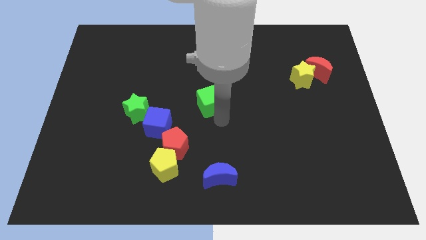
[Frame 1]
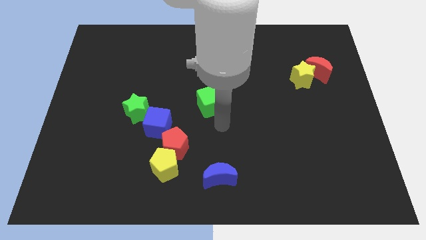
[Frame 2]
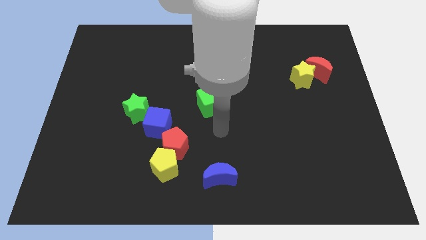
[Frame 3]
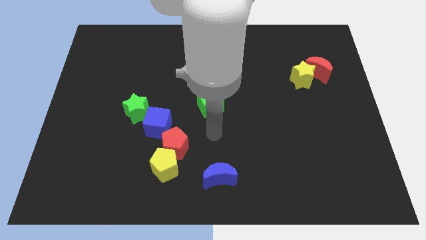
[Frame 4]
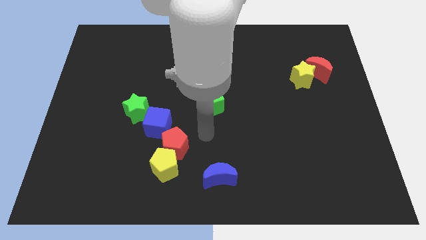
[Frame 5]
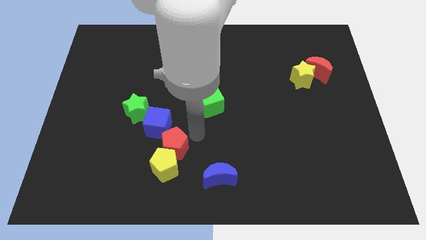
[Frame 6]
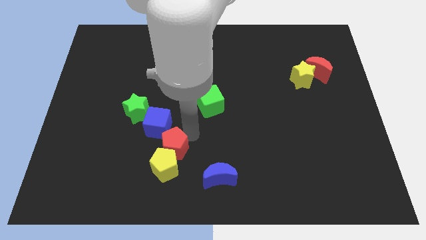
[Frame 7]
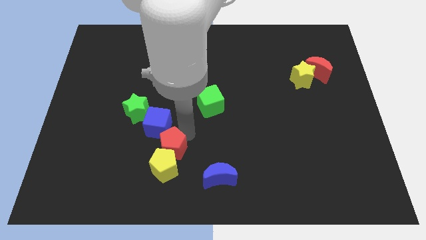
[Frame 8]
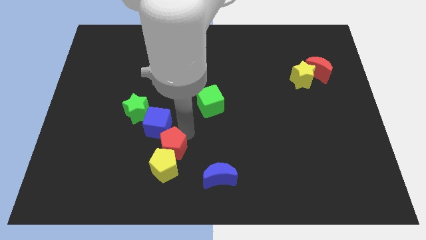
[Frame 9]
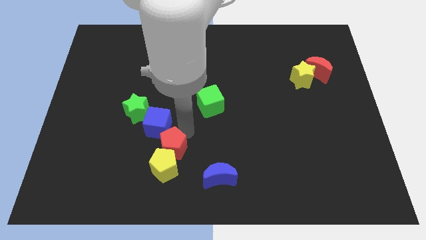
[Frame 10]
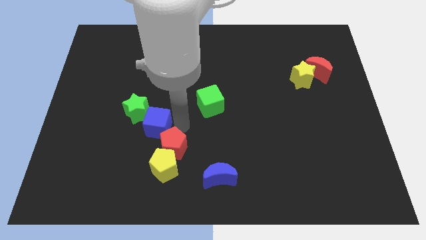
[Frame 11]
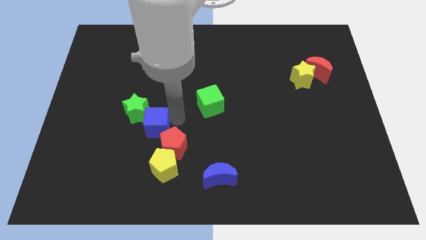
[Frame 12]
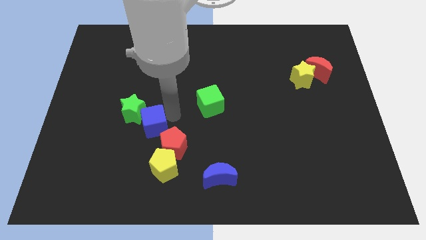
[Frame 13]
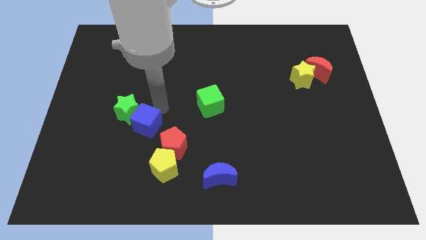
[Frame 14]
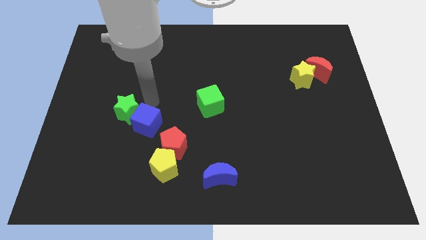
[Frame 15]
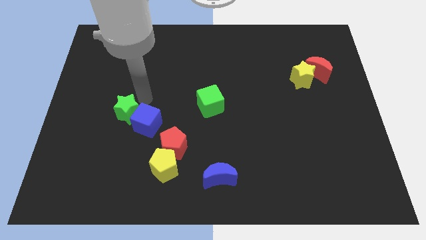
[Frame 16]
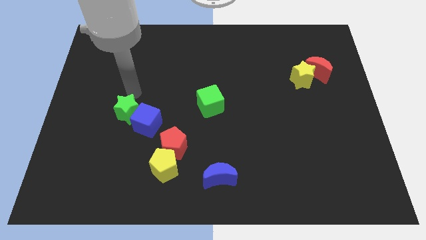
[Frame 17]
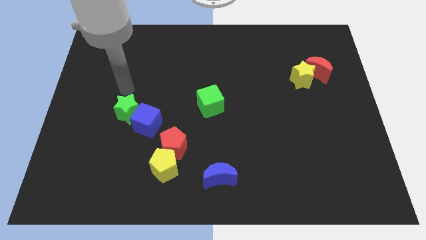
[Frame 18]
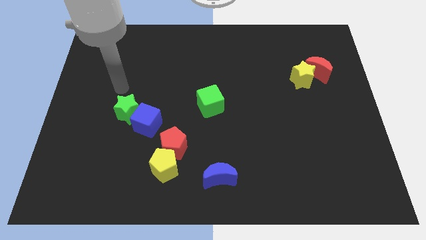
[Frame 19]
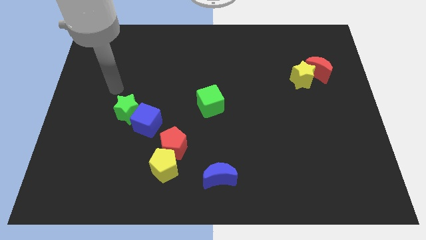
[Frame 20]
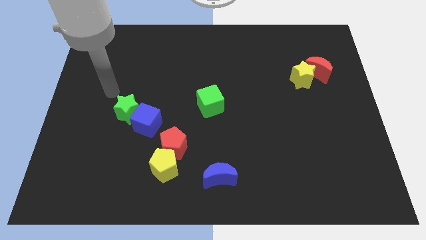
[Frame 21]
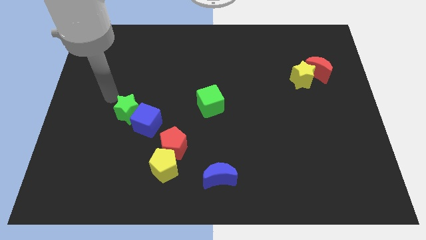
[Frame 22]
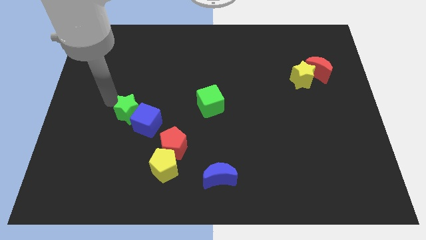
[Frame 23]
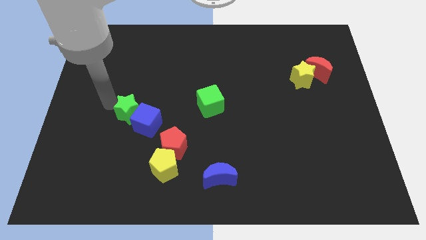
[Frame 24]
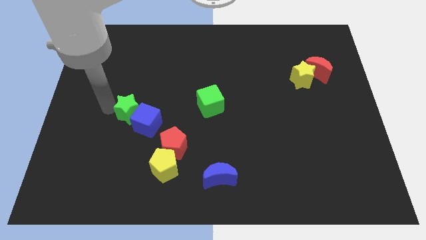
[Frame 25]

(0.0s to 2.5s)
move your arm away from the green cube

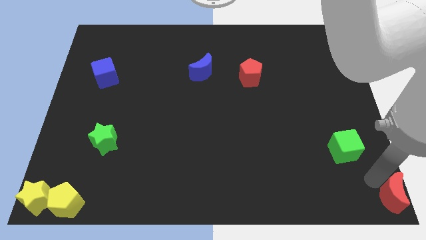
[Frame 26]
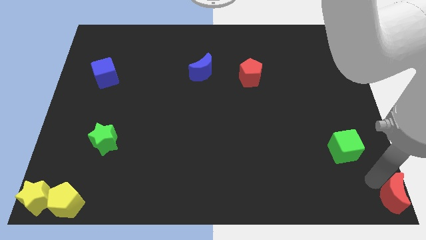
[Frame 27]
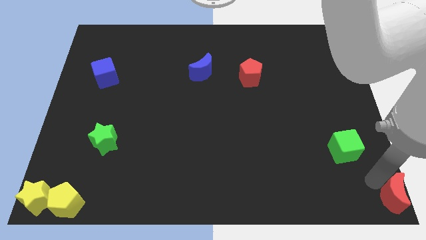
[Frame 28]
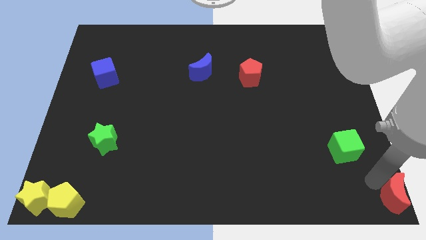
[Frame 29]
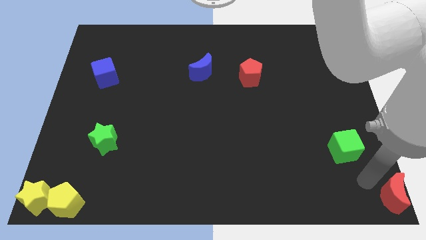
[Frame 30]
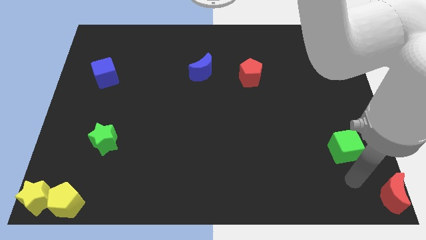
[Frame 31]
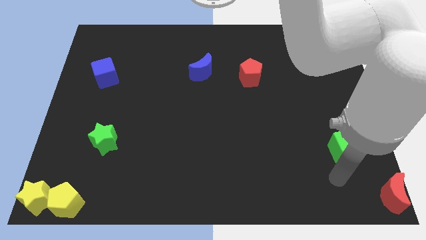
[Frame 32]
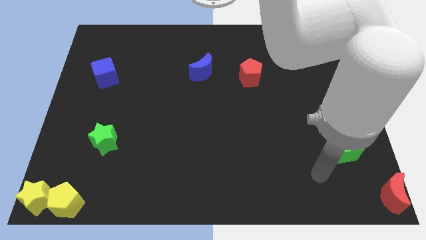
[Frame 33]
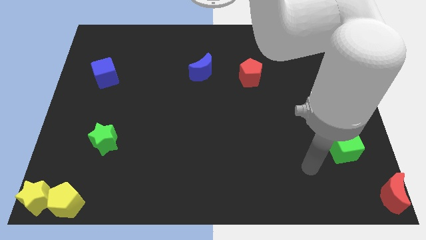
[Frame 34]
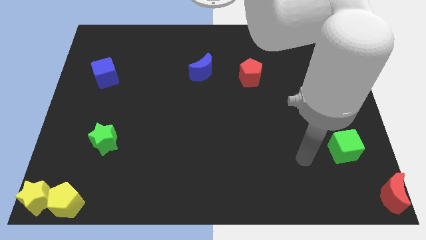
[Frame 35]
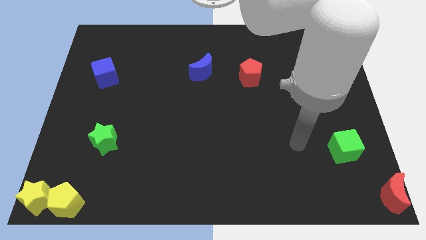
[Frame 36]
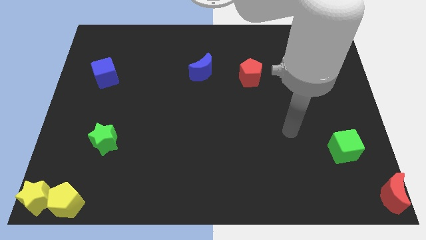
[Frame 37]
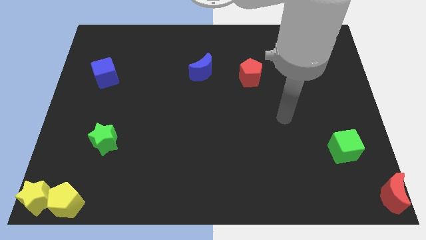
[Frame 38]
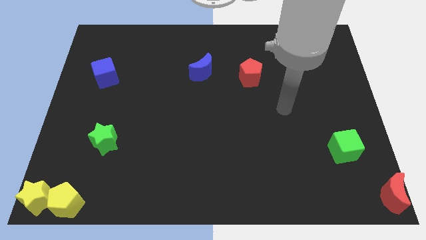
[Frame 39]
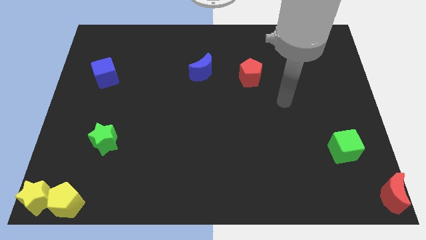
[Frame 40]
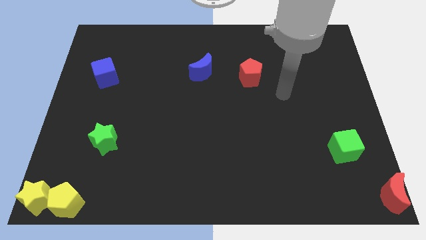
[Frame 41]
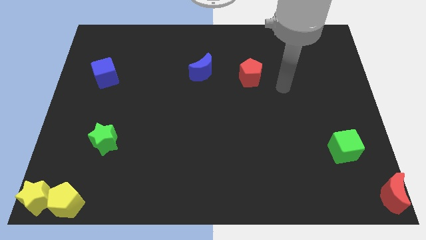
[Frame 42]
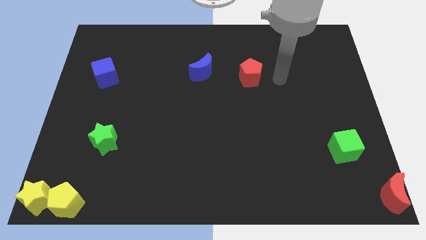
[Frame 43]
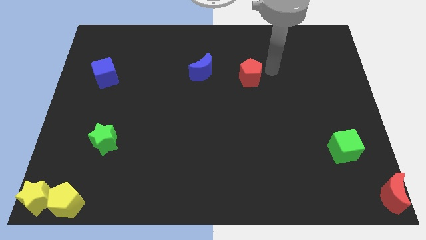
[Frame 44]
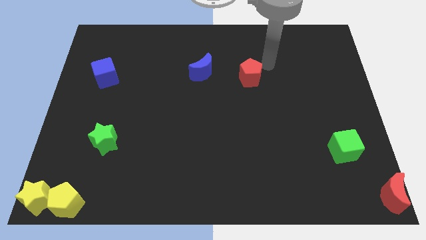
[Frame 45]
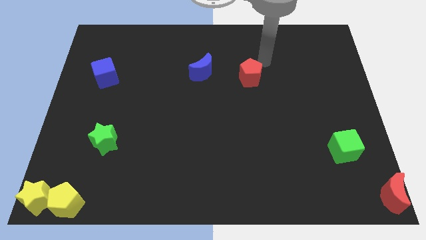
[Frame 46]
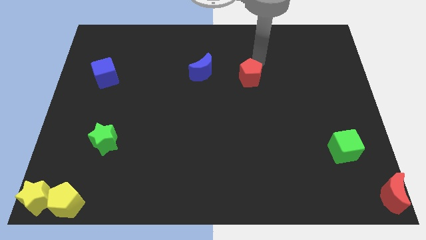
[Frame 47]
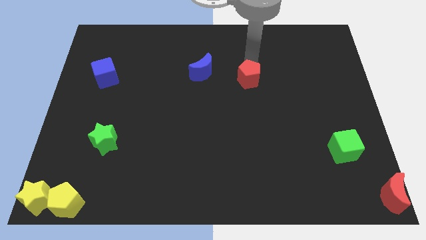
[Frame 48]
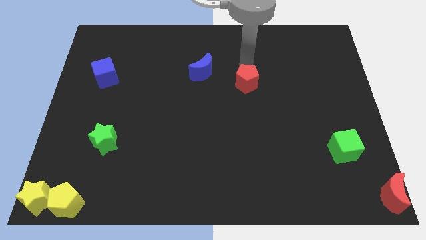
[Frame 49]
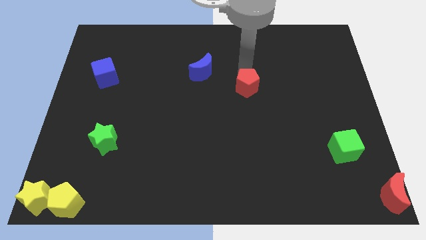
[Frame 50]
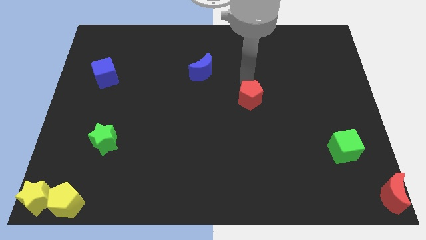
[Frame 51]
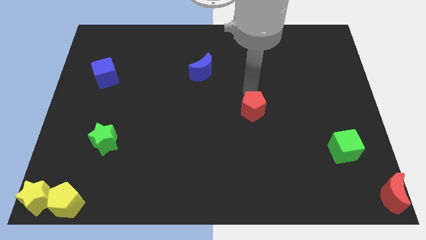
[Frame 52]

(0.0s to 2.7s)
move the red pentagon slightly downwards

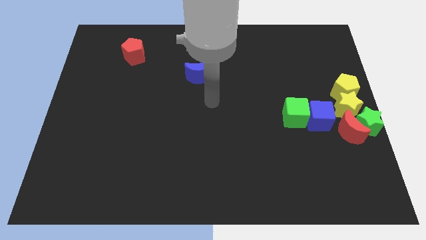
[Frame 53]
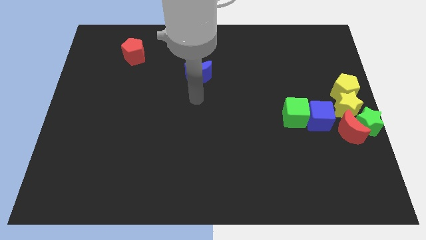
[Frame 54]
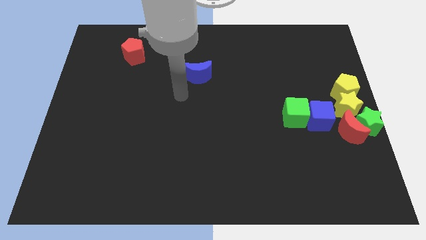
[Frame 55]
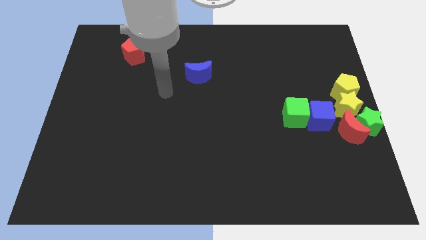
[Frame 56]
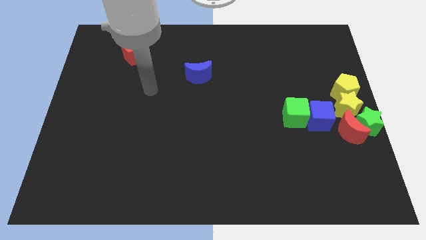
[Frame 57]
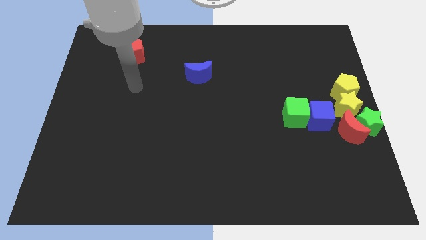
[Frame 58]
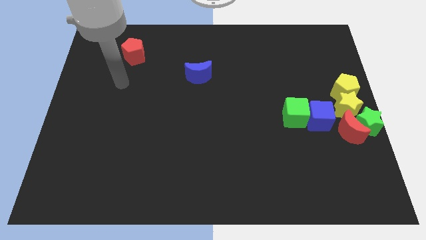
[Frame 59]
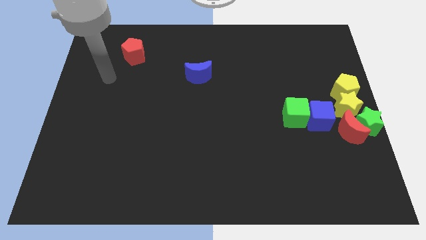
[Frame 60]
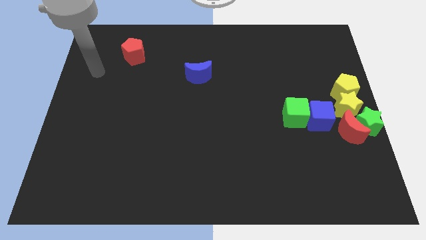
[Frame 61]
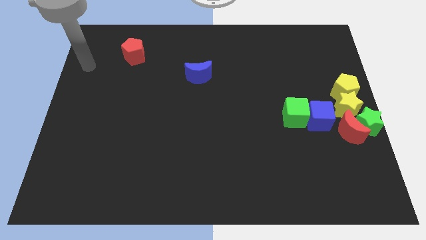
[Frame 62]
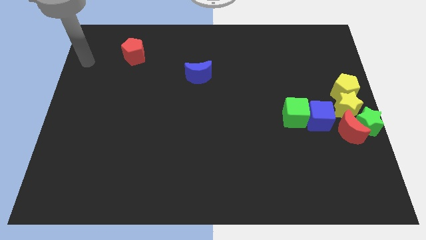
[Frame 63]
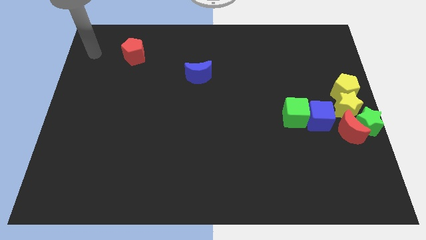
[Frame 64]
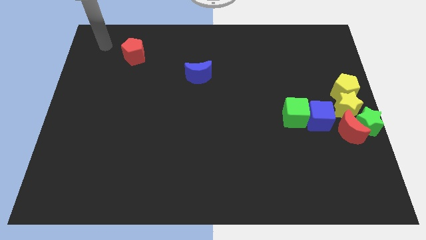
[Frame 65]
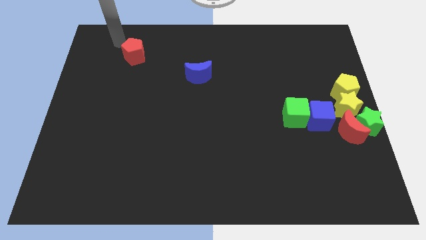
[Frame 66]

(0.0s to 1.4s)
move your arm above the red pentagon

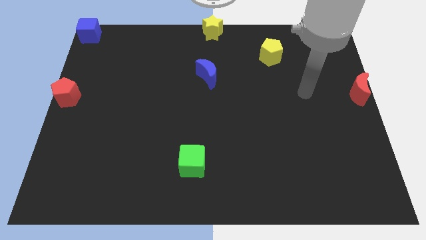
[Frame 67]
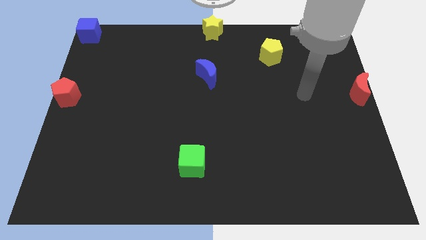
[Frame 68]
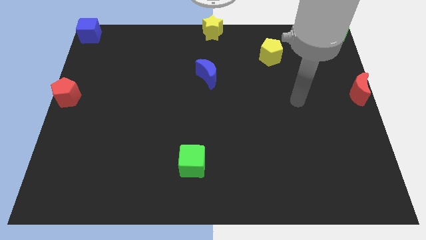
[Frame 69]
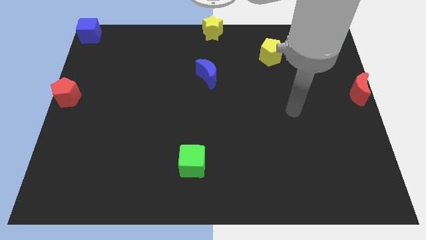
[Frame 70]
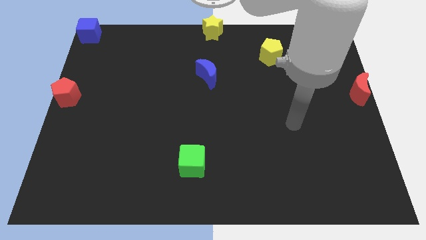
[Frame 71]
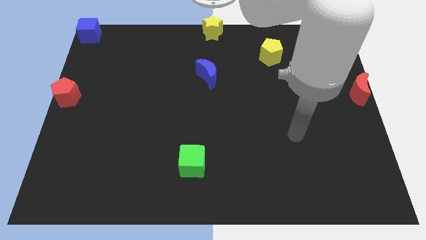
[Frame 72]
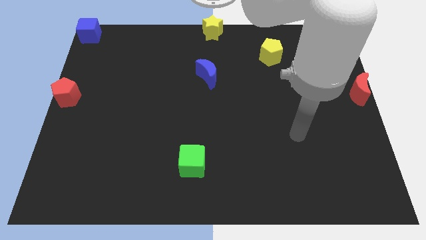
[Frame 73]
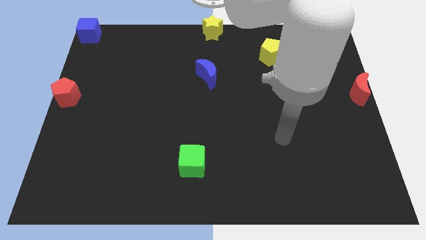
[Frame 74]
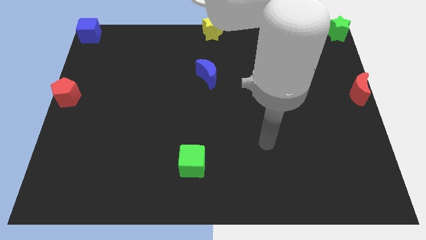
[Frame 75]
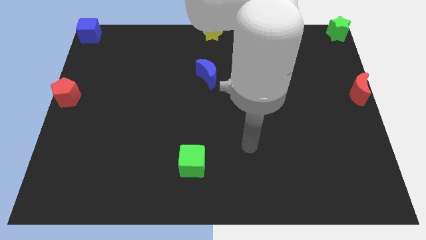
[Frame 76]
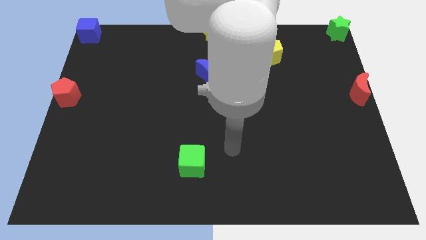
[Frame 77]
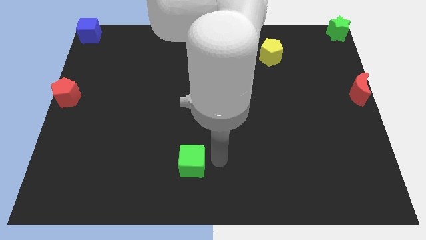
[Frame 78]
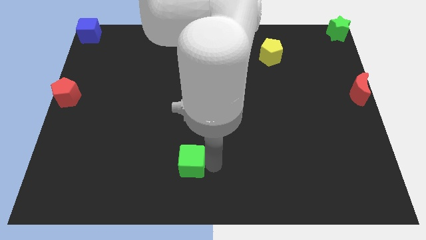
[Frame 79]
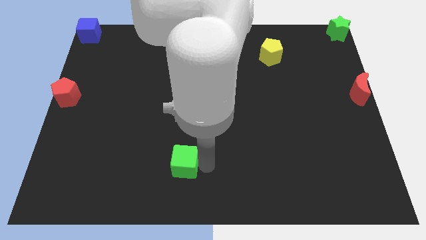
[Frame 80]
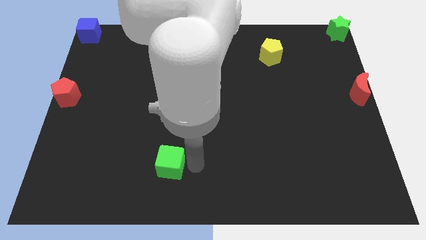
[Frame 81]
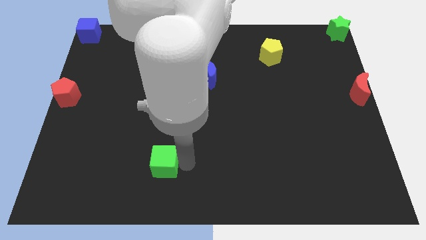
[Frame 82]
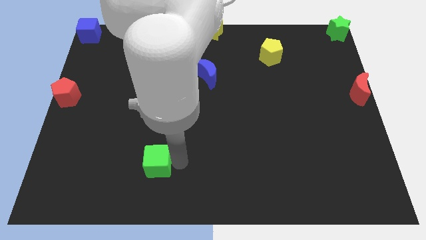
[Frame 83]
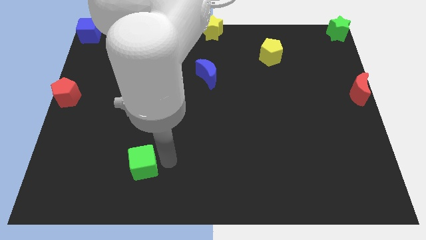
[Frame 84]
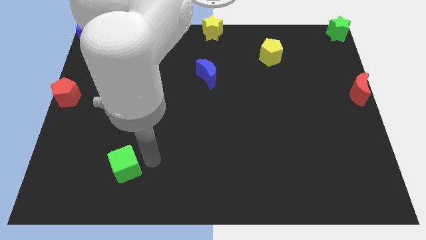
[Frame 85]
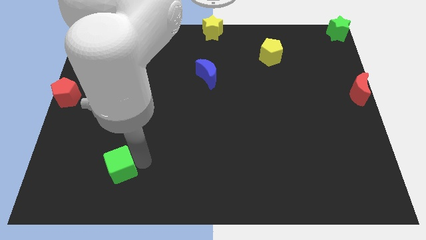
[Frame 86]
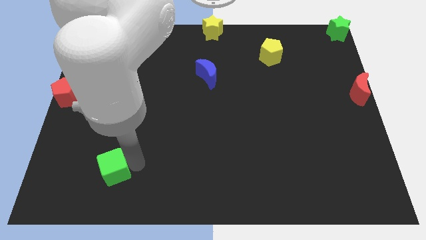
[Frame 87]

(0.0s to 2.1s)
move the green cube towards left

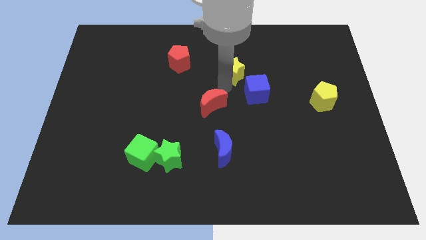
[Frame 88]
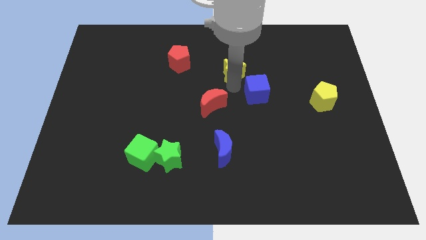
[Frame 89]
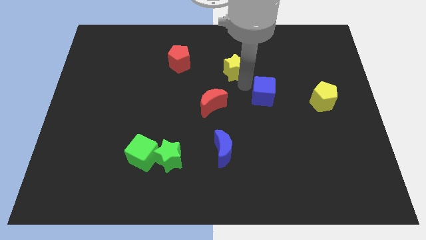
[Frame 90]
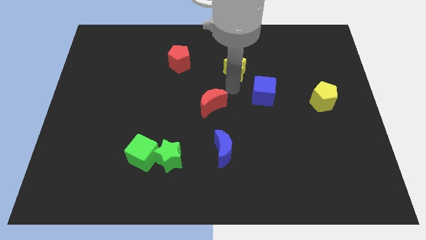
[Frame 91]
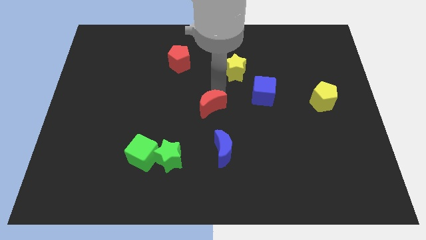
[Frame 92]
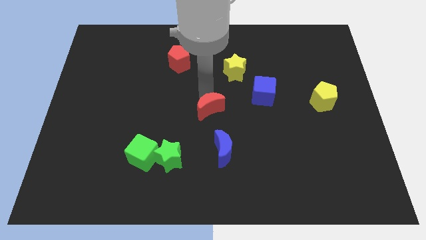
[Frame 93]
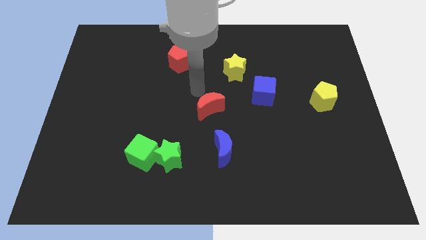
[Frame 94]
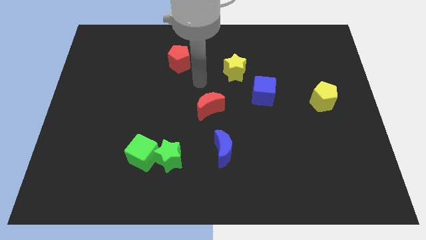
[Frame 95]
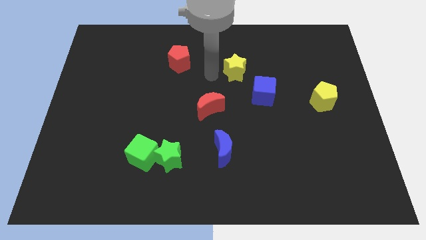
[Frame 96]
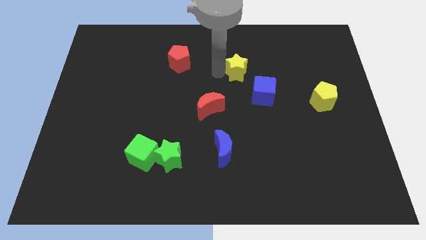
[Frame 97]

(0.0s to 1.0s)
move your arm away from red moon
